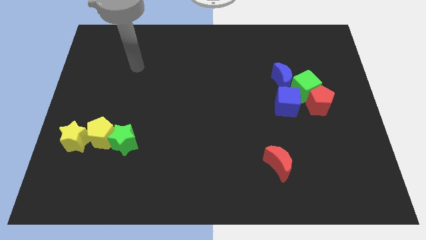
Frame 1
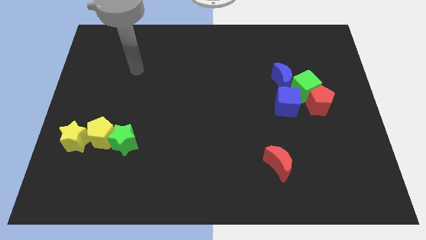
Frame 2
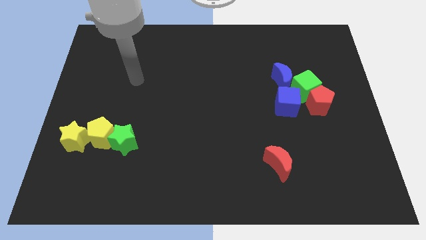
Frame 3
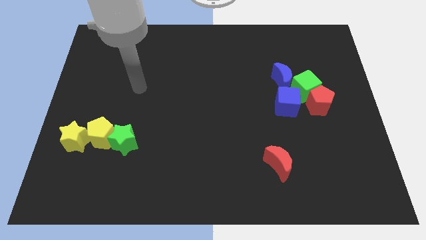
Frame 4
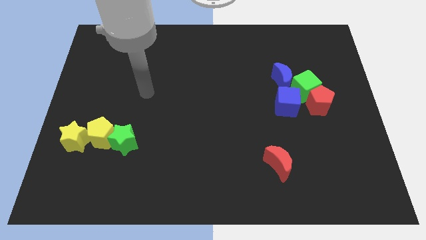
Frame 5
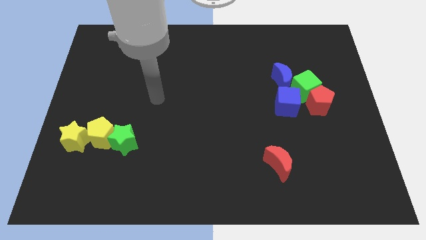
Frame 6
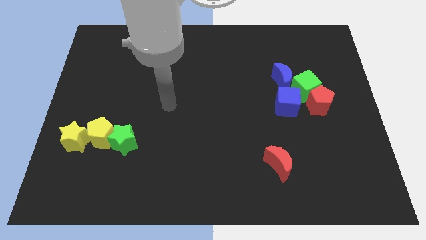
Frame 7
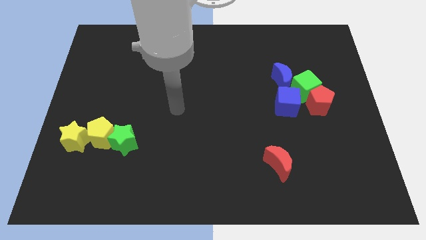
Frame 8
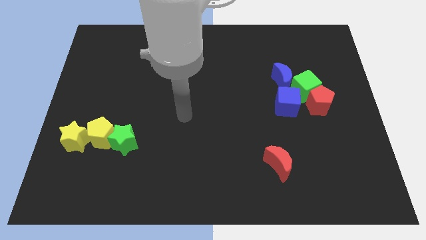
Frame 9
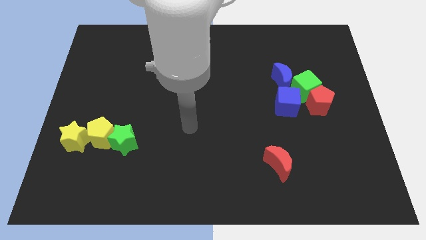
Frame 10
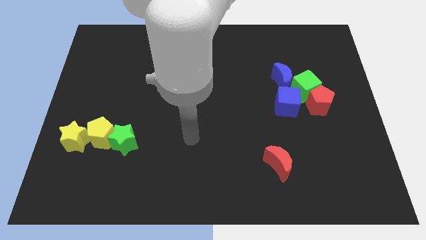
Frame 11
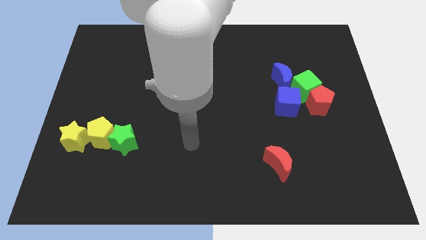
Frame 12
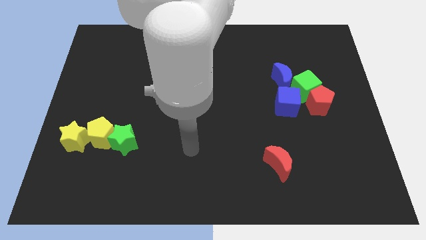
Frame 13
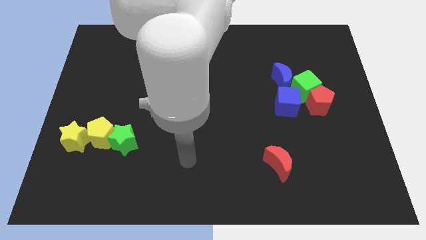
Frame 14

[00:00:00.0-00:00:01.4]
move your arm towards the bottom side of the board

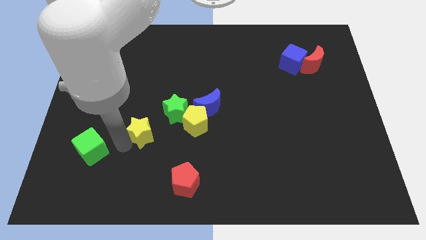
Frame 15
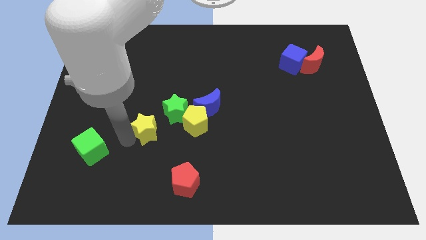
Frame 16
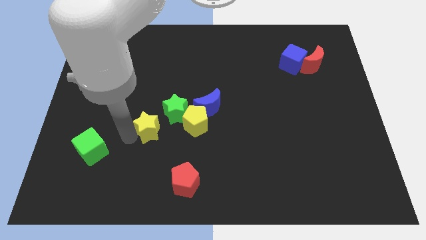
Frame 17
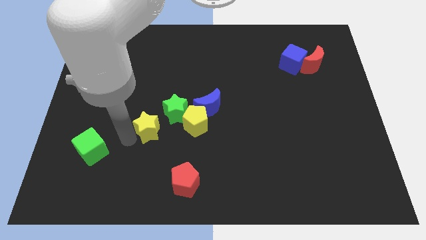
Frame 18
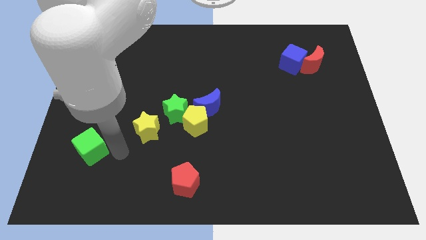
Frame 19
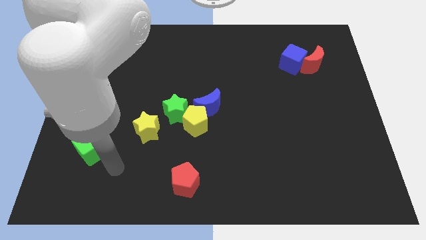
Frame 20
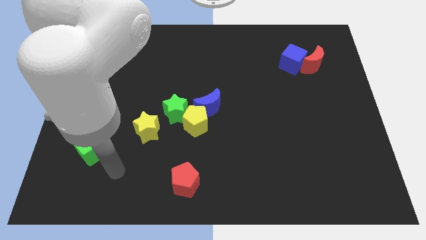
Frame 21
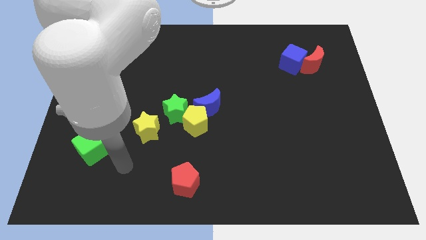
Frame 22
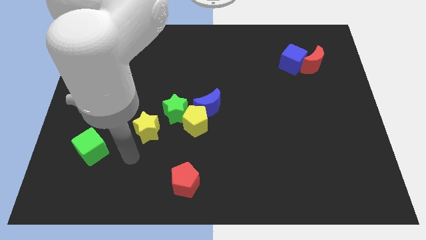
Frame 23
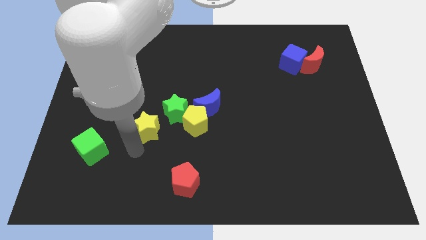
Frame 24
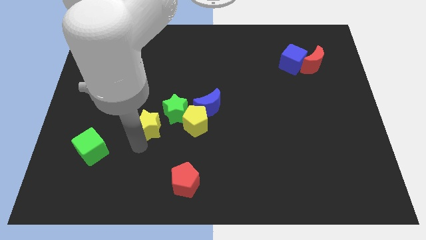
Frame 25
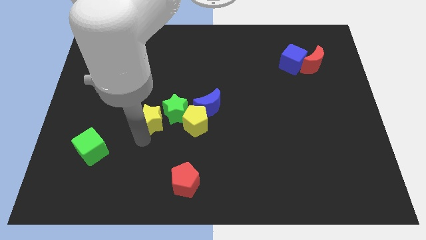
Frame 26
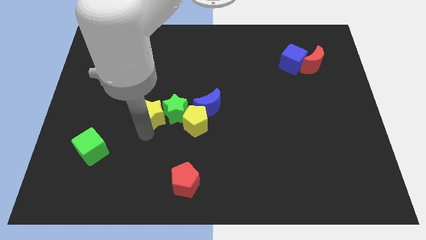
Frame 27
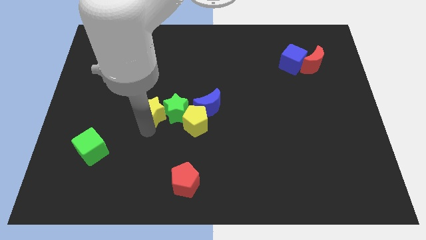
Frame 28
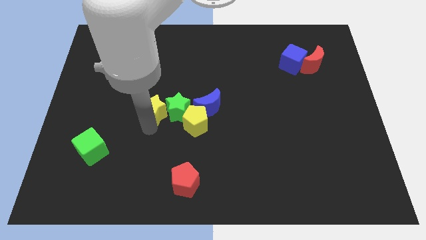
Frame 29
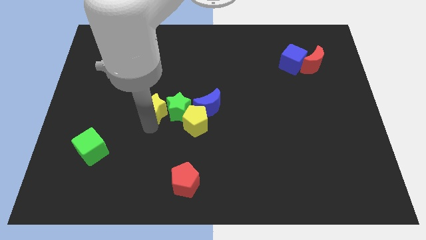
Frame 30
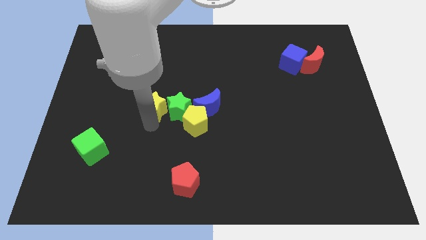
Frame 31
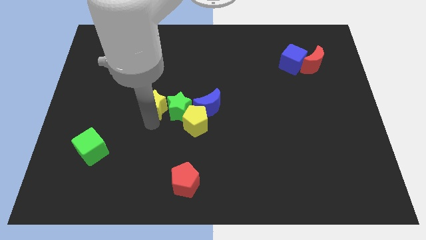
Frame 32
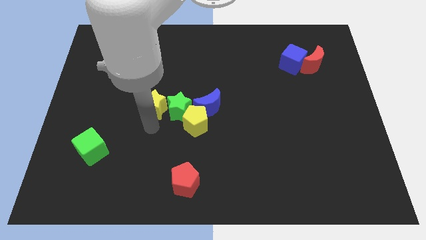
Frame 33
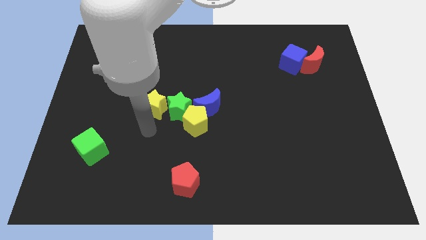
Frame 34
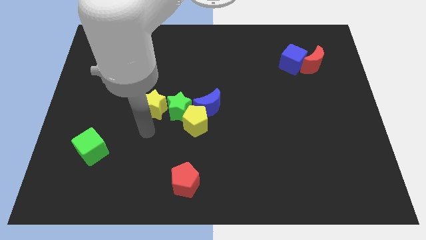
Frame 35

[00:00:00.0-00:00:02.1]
push yellow star to the left of green star

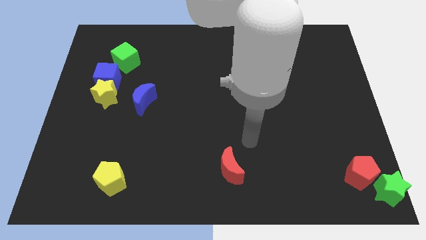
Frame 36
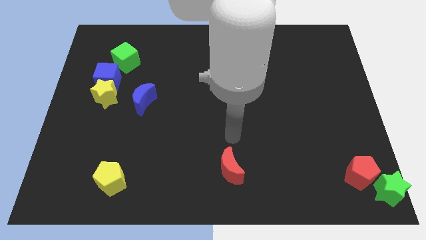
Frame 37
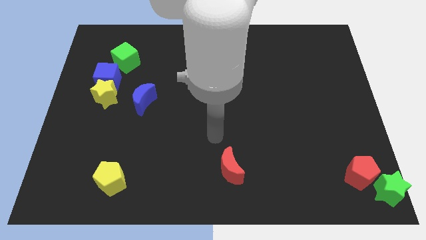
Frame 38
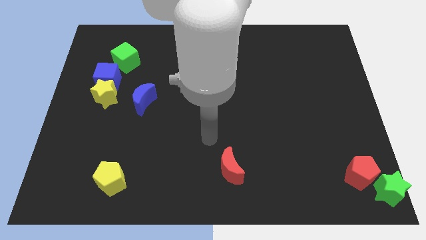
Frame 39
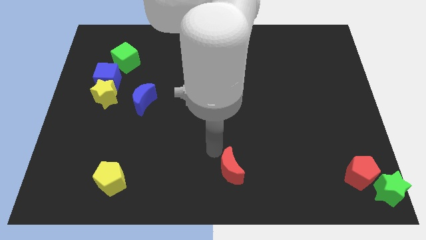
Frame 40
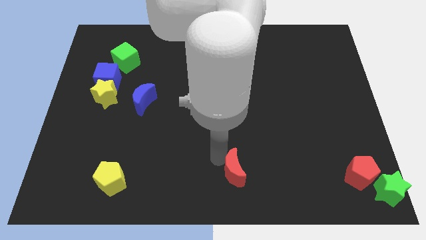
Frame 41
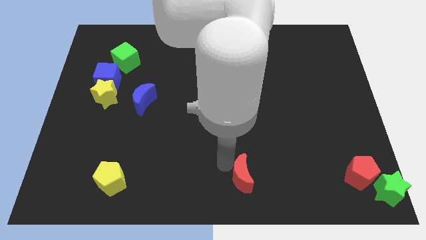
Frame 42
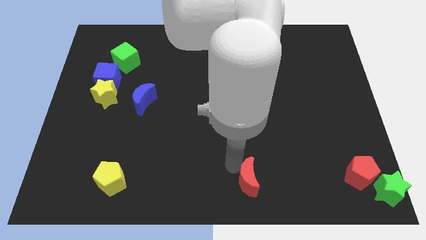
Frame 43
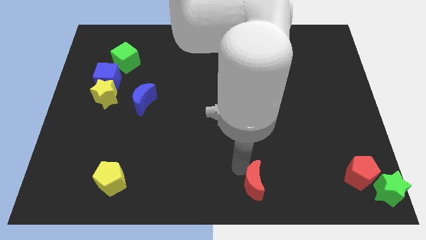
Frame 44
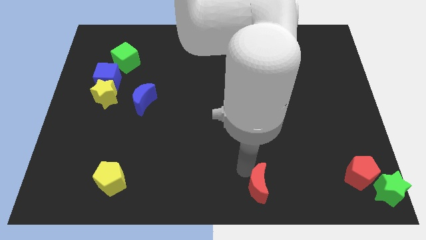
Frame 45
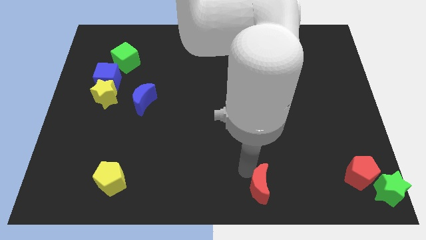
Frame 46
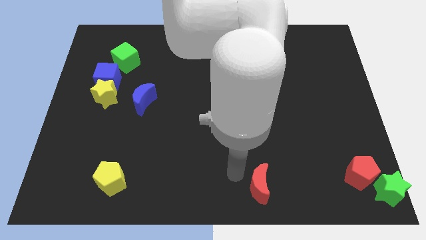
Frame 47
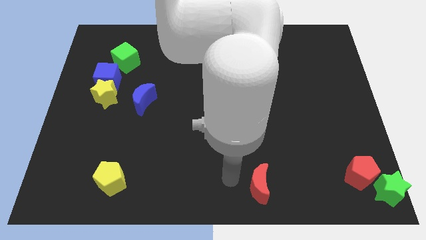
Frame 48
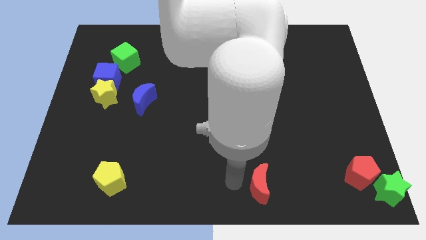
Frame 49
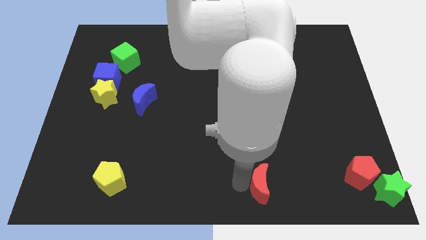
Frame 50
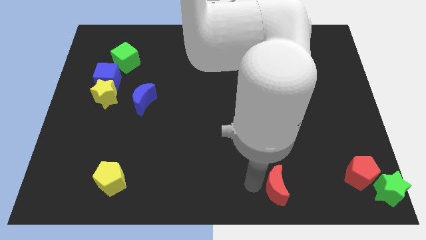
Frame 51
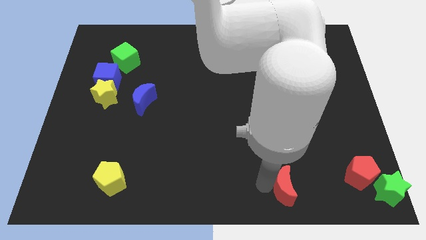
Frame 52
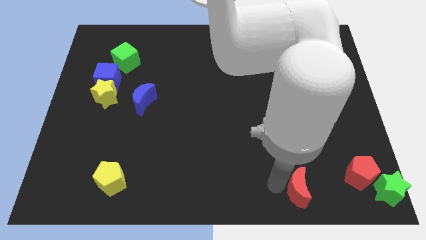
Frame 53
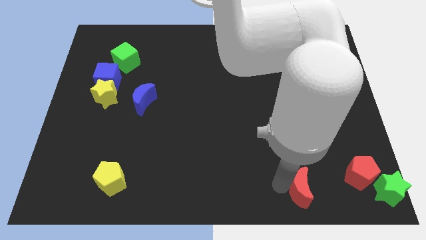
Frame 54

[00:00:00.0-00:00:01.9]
move the red crescent towards the right side of the board

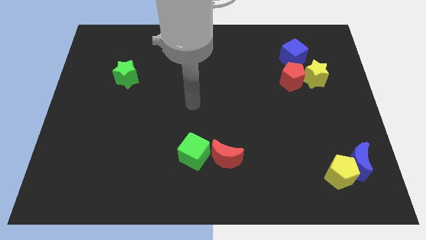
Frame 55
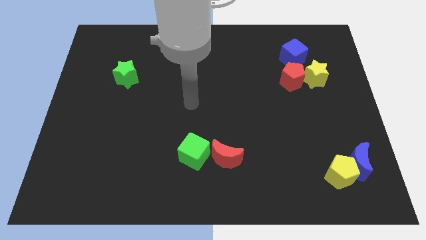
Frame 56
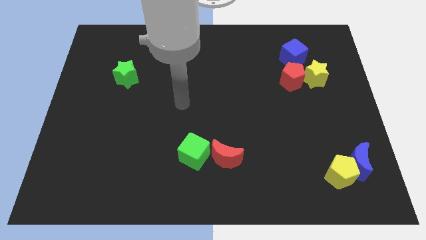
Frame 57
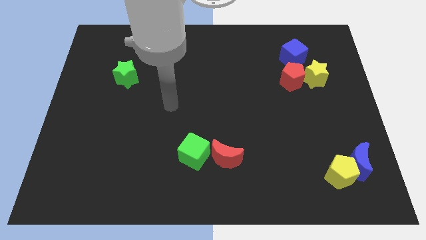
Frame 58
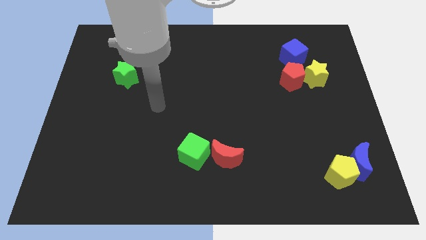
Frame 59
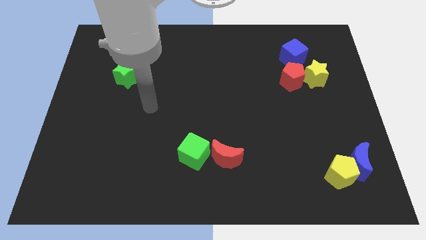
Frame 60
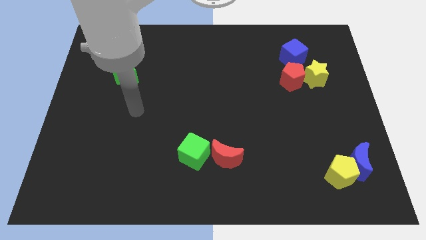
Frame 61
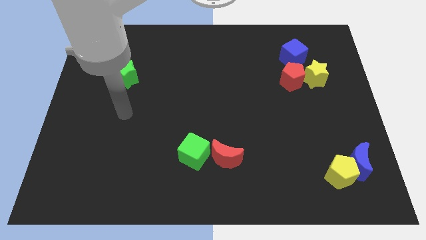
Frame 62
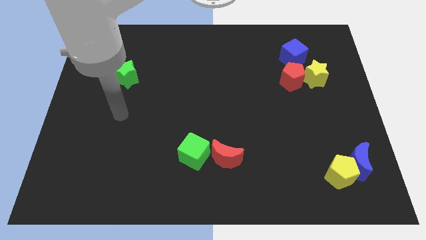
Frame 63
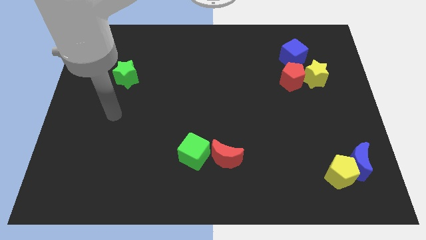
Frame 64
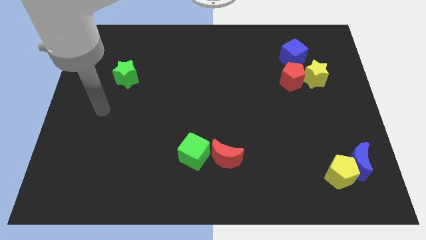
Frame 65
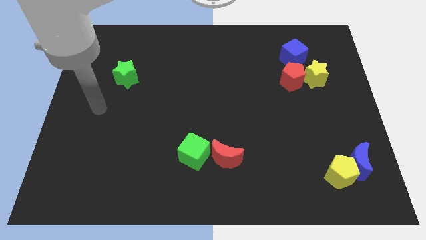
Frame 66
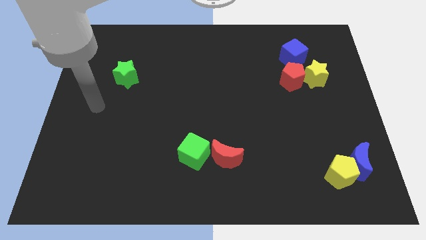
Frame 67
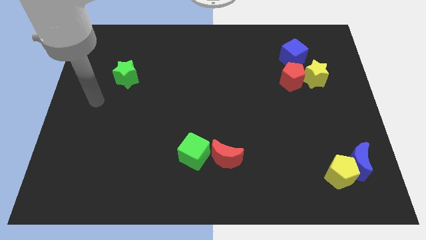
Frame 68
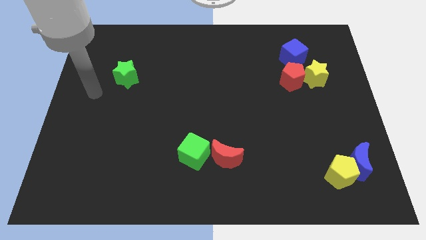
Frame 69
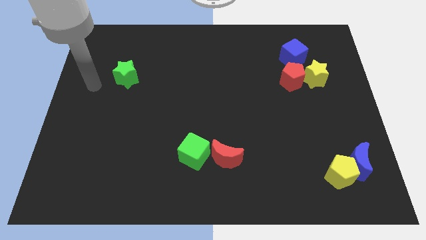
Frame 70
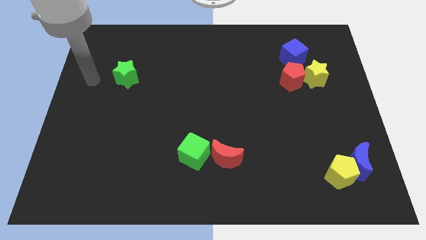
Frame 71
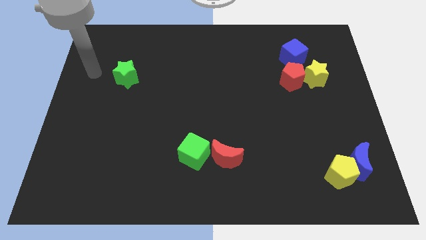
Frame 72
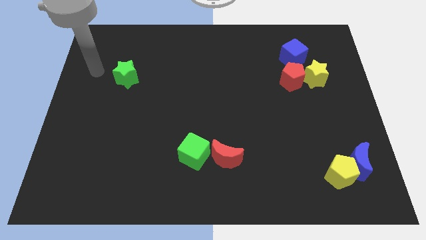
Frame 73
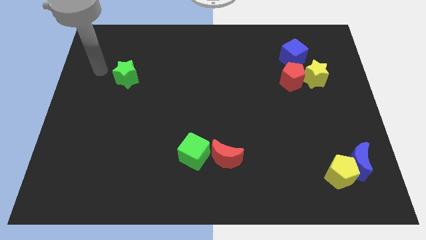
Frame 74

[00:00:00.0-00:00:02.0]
point your hand at the left side of the green star

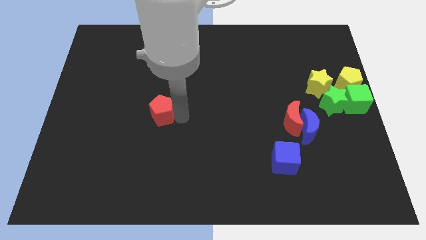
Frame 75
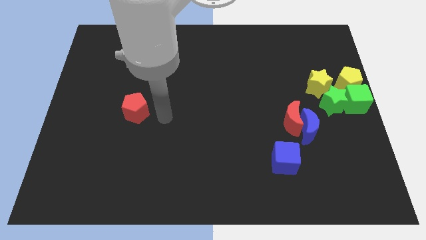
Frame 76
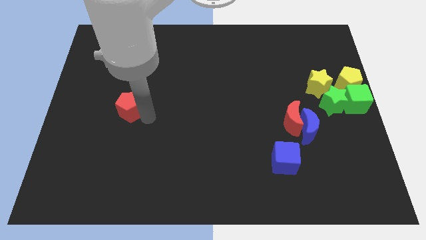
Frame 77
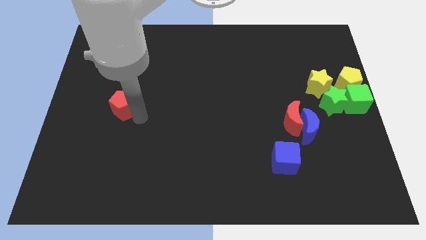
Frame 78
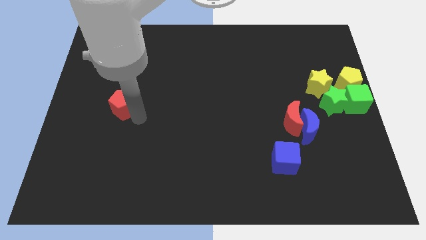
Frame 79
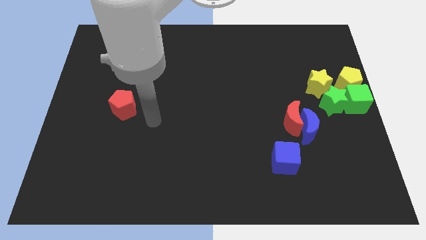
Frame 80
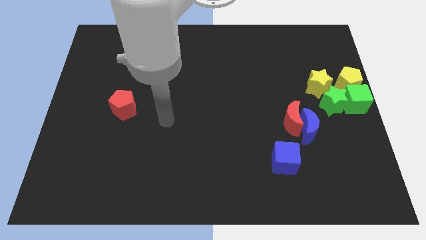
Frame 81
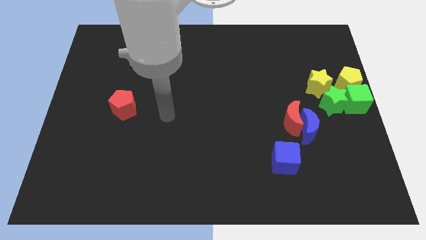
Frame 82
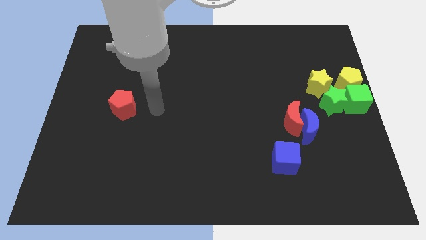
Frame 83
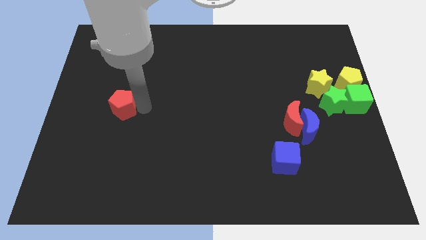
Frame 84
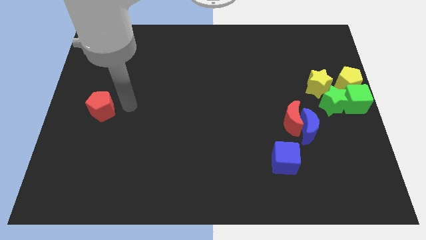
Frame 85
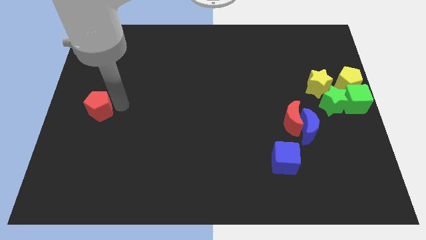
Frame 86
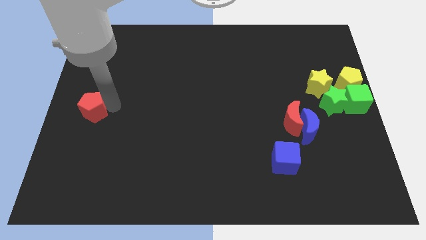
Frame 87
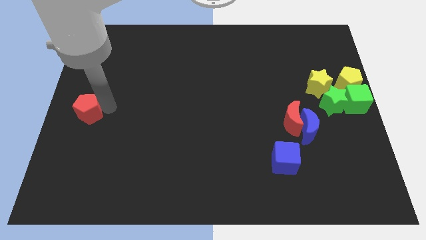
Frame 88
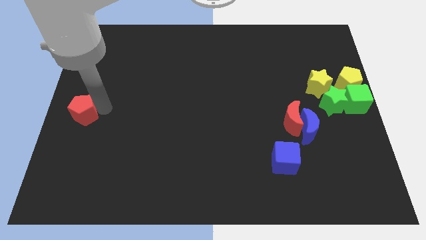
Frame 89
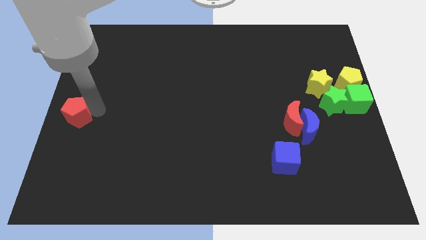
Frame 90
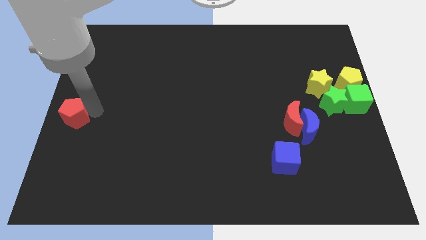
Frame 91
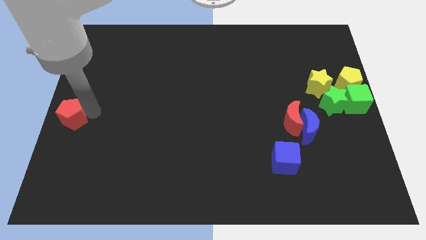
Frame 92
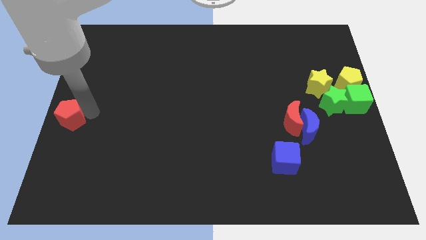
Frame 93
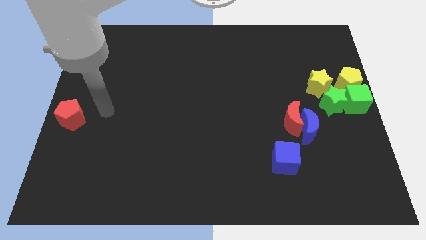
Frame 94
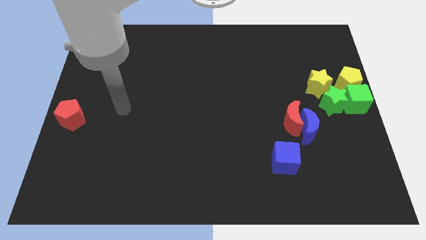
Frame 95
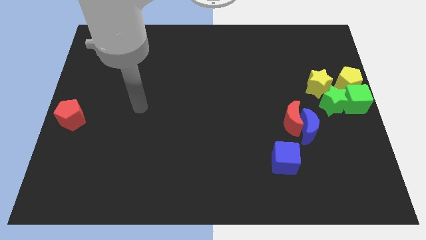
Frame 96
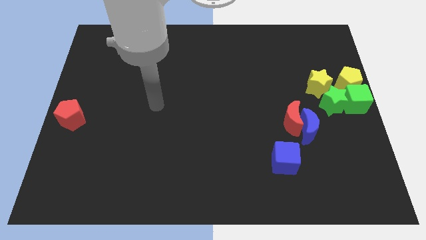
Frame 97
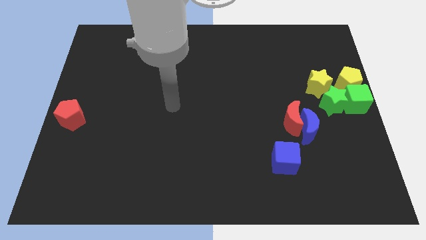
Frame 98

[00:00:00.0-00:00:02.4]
put the red pentagon to the center left side of the board
